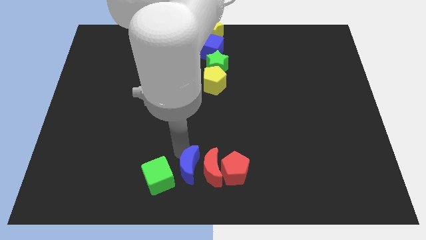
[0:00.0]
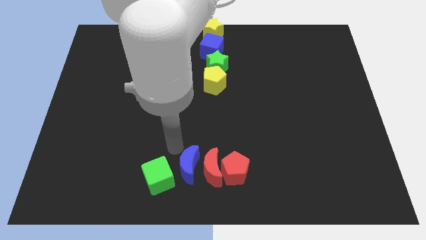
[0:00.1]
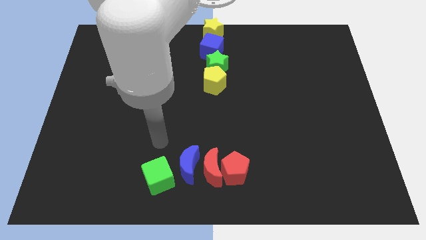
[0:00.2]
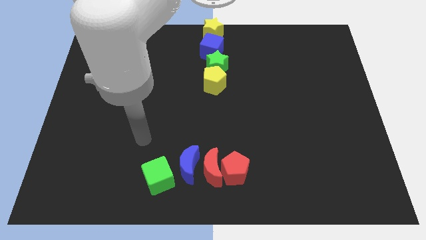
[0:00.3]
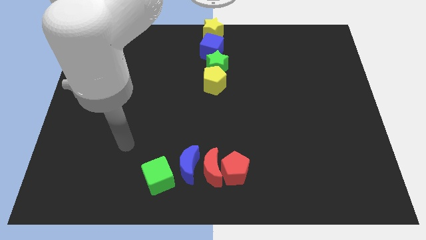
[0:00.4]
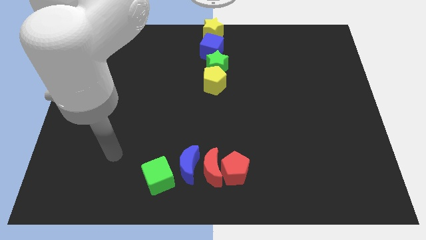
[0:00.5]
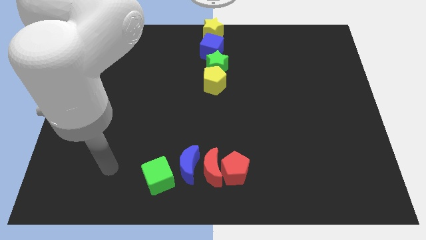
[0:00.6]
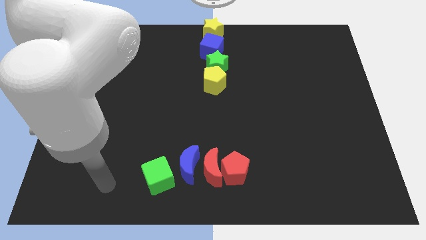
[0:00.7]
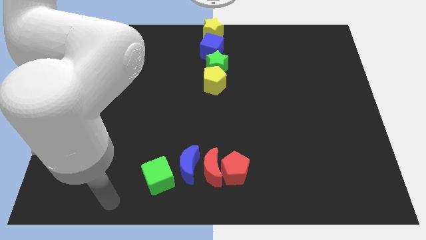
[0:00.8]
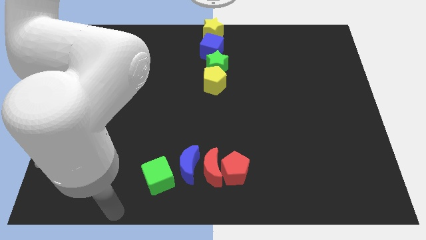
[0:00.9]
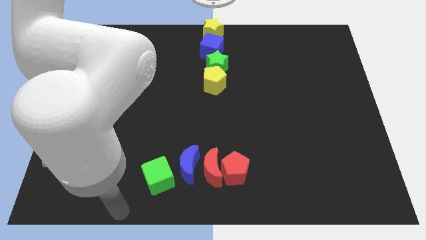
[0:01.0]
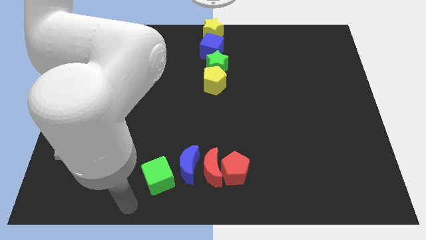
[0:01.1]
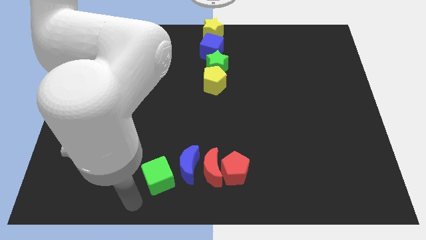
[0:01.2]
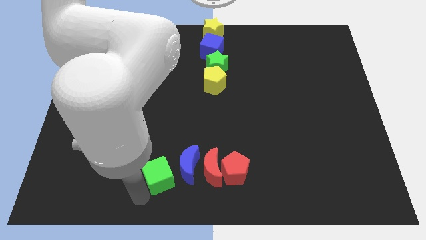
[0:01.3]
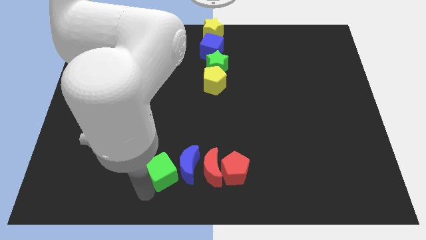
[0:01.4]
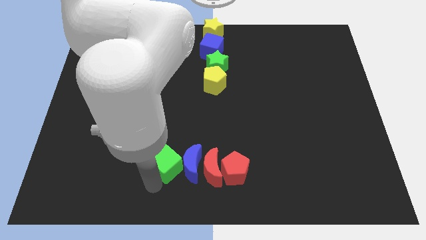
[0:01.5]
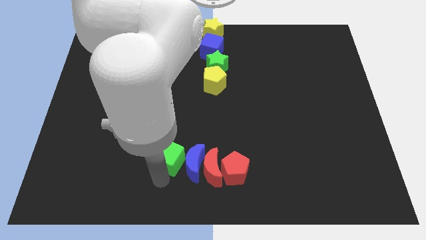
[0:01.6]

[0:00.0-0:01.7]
move the green cube into the blue crescent

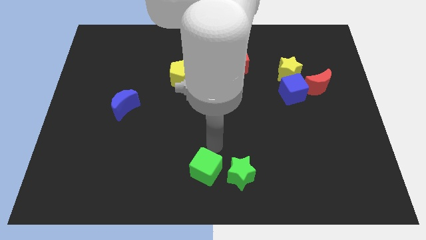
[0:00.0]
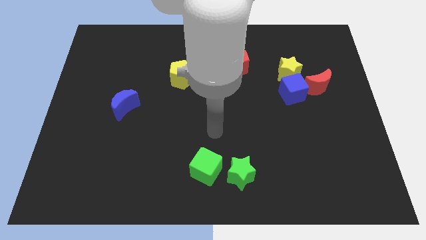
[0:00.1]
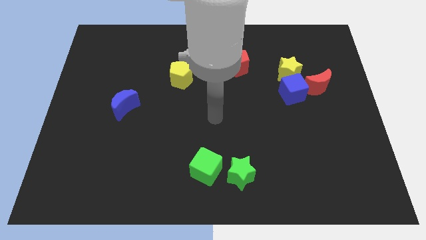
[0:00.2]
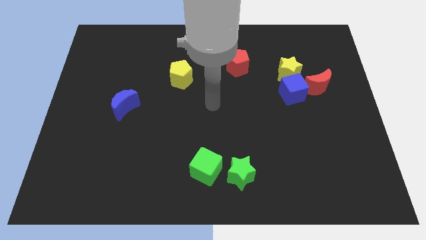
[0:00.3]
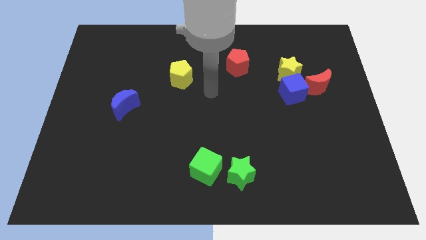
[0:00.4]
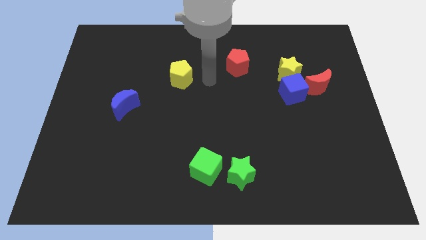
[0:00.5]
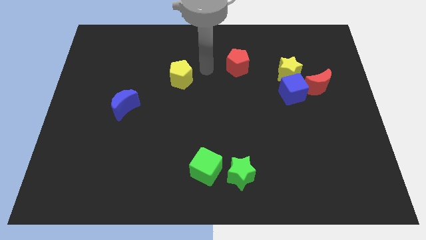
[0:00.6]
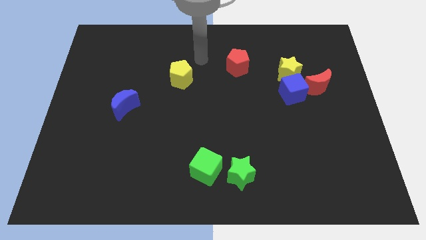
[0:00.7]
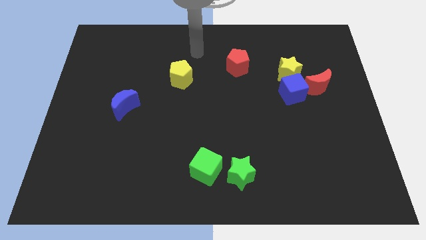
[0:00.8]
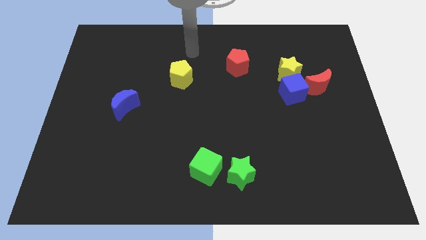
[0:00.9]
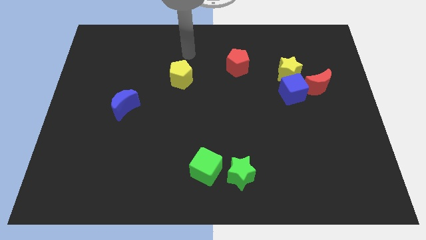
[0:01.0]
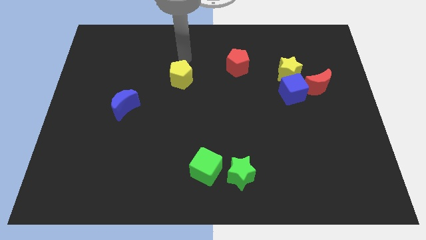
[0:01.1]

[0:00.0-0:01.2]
place your hand above the yellow pentagon

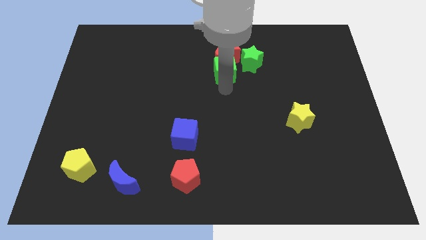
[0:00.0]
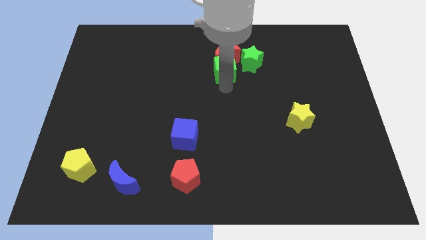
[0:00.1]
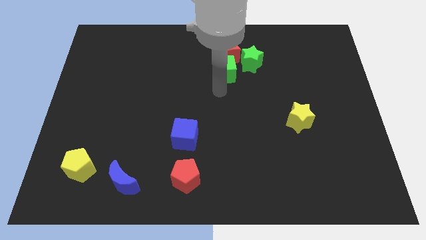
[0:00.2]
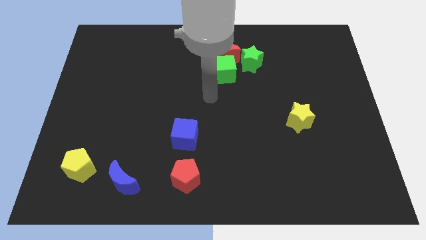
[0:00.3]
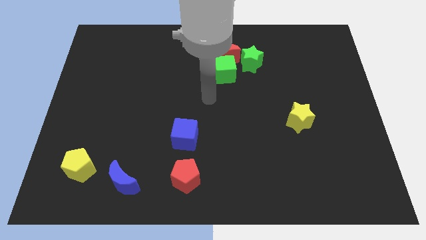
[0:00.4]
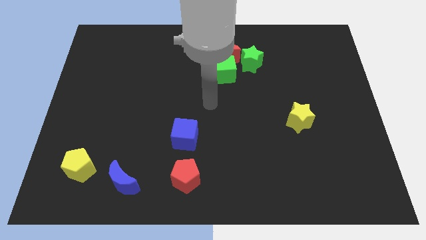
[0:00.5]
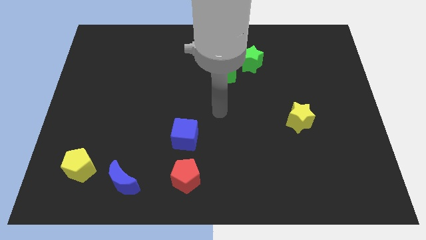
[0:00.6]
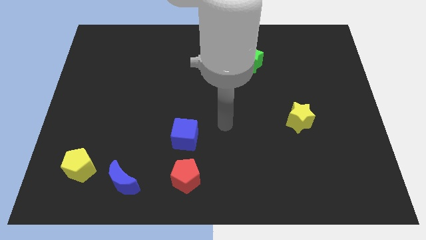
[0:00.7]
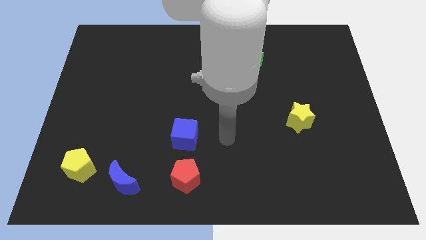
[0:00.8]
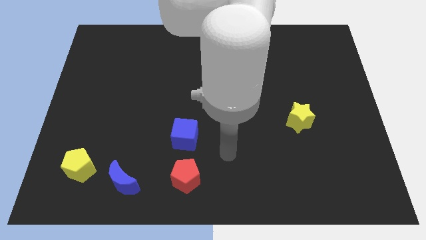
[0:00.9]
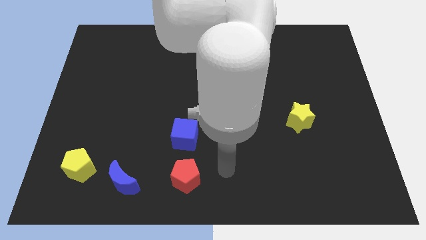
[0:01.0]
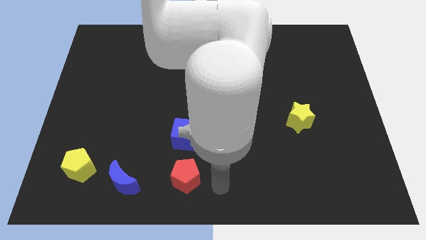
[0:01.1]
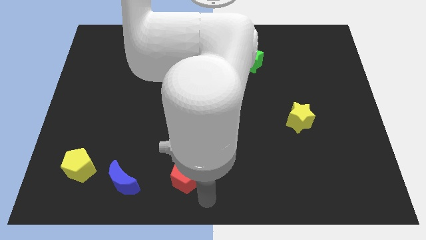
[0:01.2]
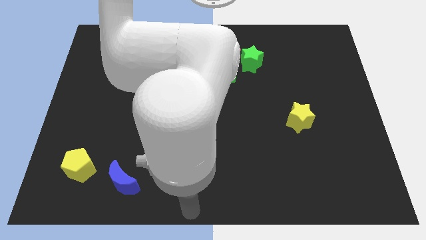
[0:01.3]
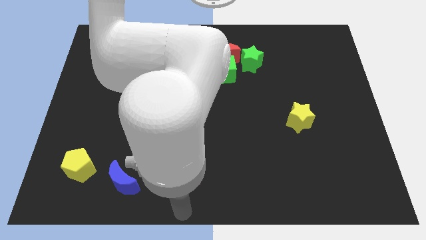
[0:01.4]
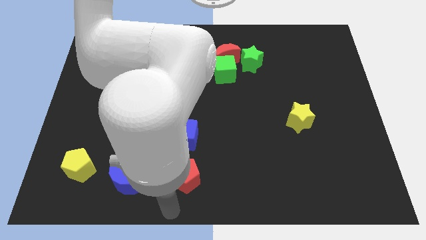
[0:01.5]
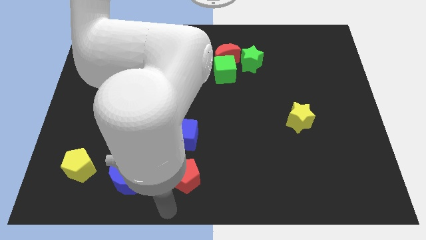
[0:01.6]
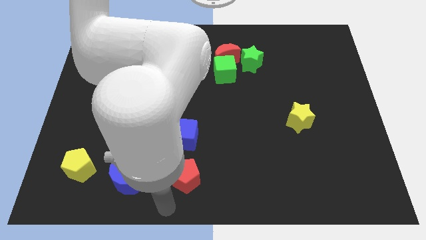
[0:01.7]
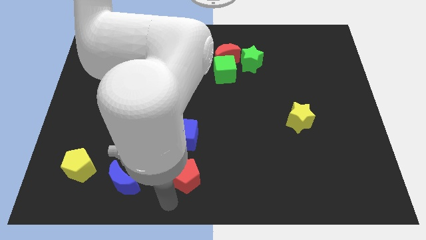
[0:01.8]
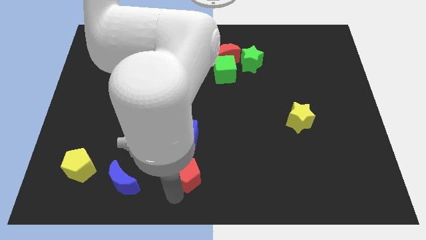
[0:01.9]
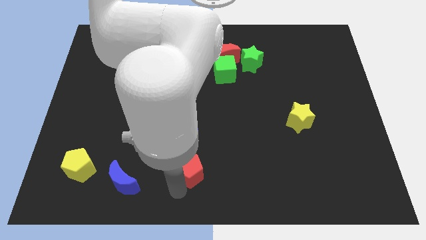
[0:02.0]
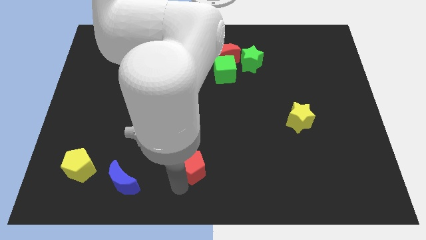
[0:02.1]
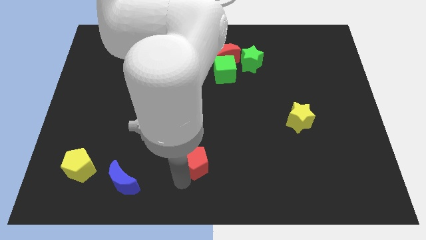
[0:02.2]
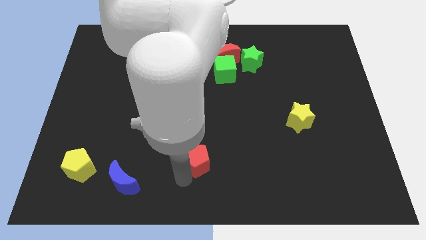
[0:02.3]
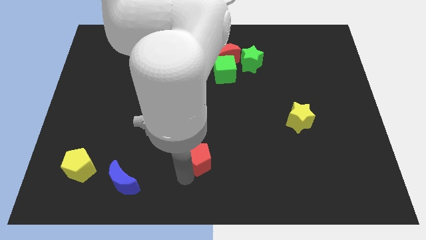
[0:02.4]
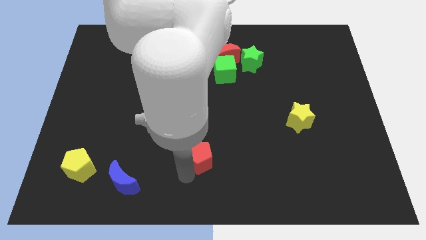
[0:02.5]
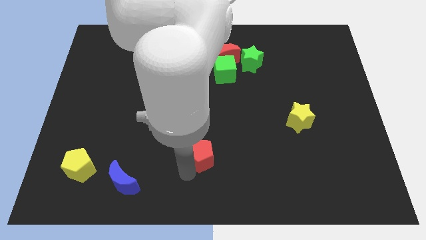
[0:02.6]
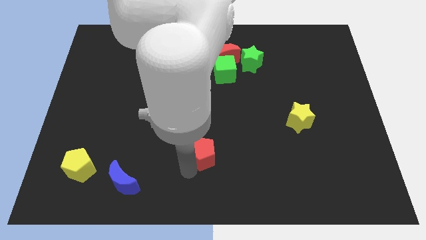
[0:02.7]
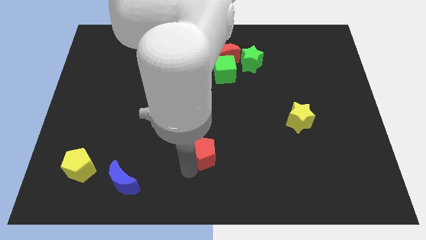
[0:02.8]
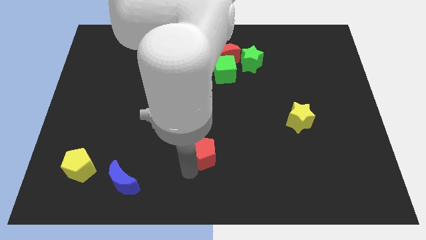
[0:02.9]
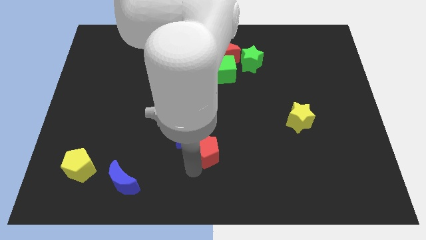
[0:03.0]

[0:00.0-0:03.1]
place red pentagon close to blue moon

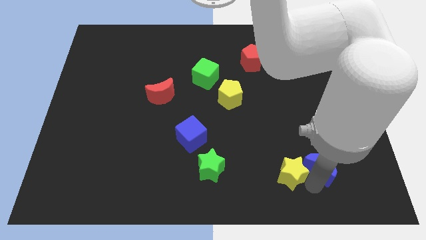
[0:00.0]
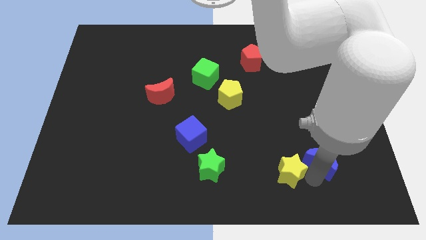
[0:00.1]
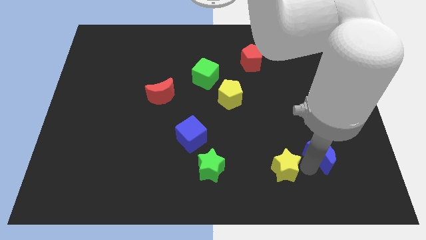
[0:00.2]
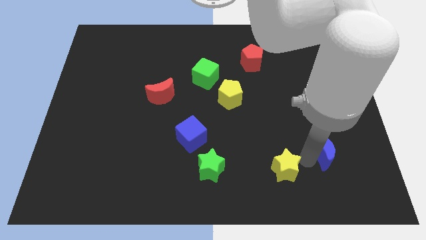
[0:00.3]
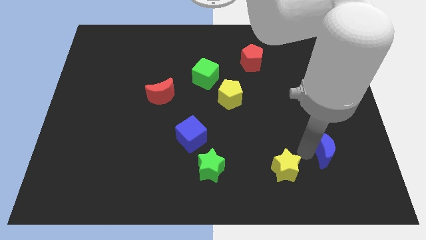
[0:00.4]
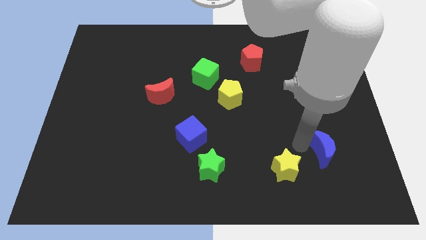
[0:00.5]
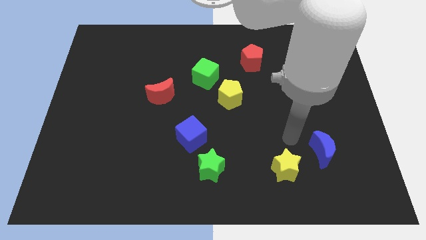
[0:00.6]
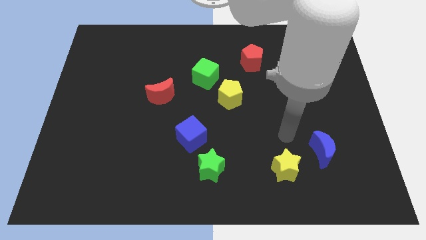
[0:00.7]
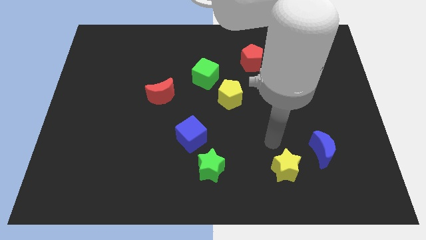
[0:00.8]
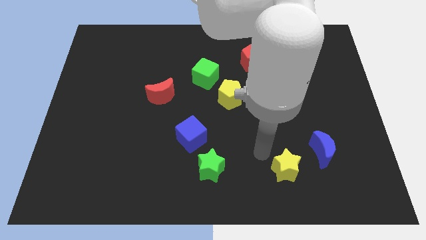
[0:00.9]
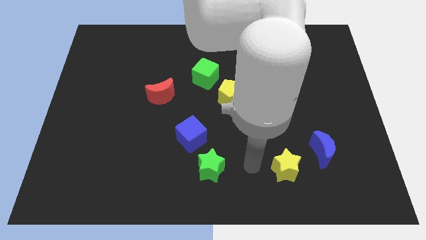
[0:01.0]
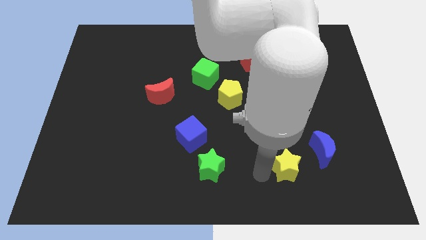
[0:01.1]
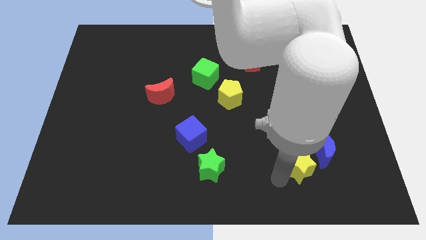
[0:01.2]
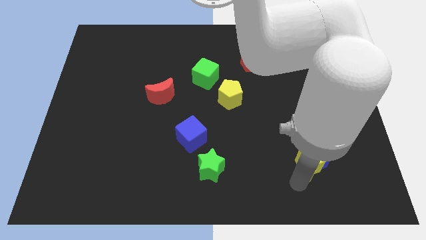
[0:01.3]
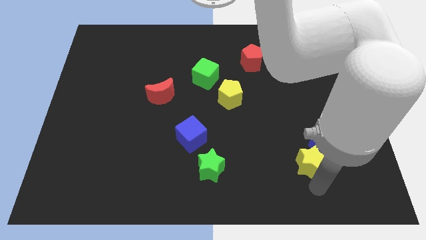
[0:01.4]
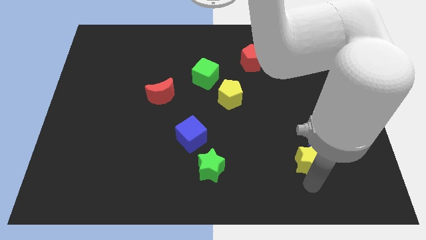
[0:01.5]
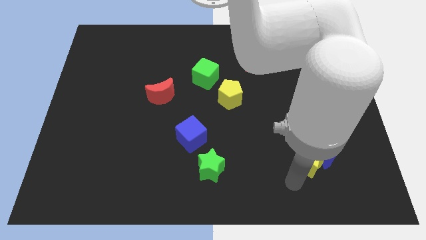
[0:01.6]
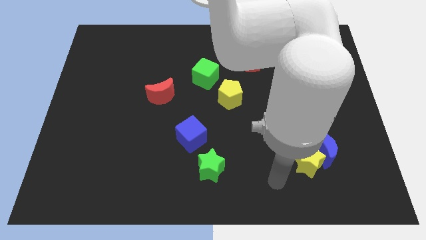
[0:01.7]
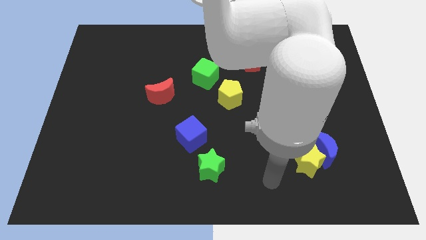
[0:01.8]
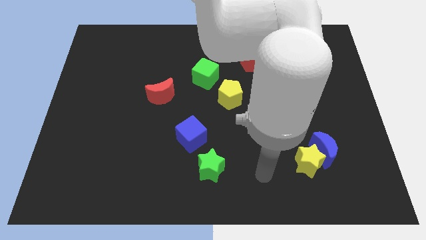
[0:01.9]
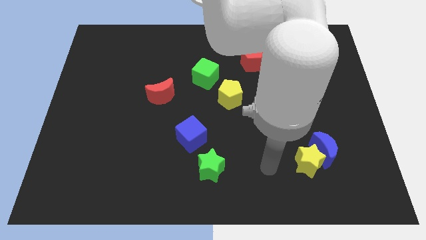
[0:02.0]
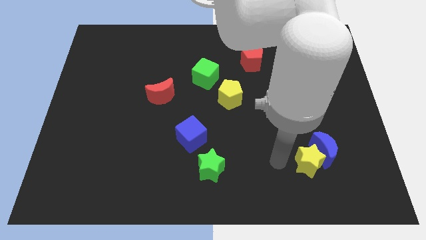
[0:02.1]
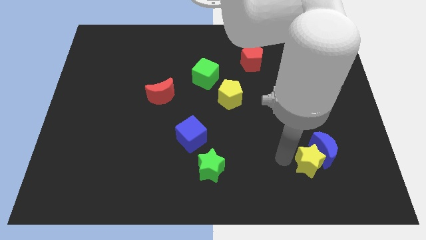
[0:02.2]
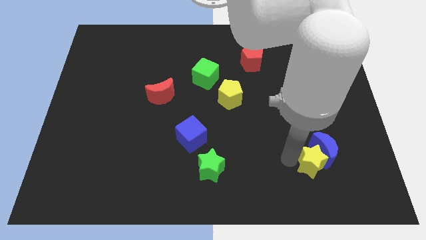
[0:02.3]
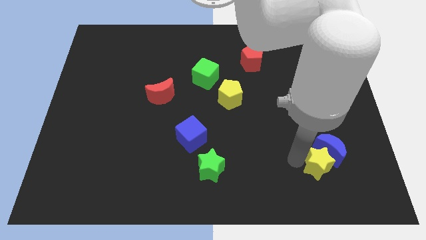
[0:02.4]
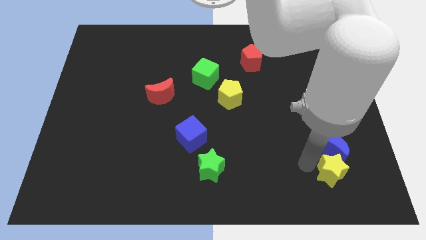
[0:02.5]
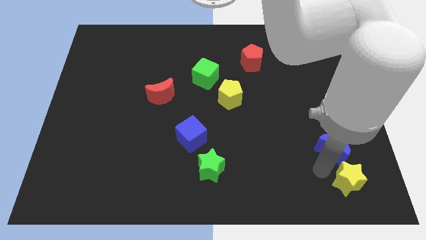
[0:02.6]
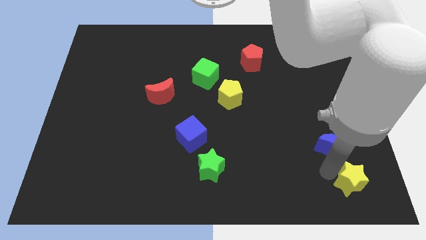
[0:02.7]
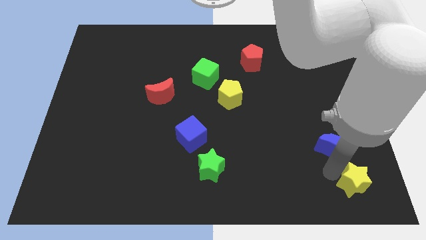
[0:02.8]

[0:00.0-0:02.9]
move the yellow star towards the bottom right

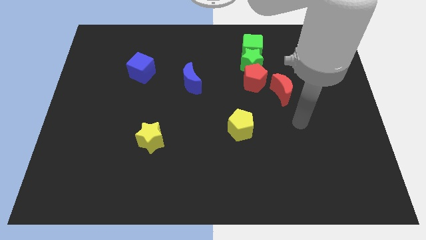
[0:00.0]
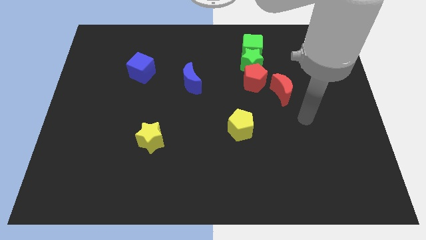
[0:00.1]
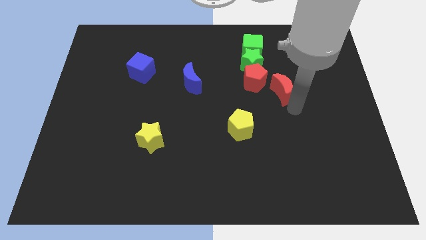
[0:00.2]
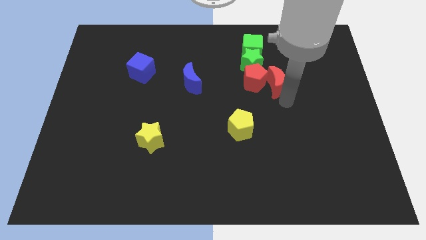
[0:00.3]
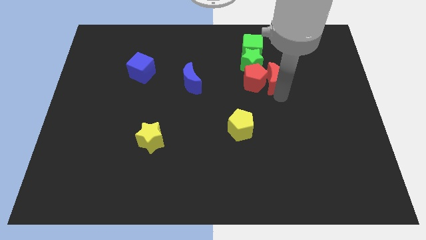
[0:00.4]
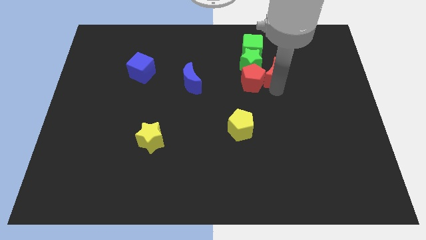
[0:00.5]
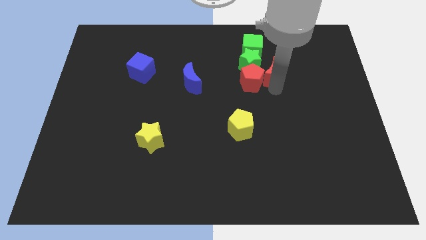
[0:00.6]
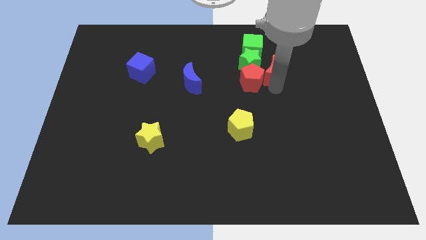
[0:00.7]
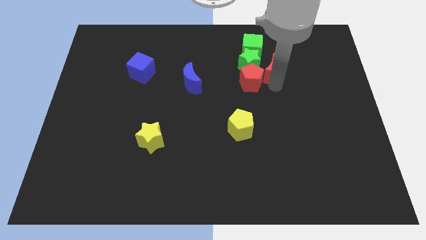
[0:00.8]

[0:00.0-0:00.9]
move red moon right beside red pentagon
